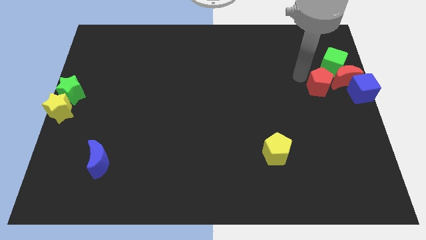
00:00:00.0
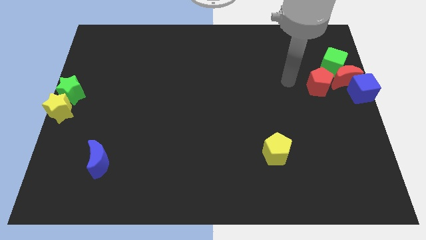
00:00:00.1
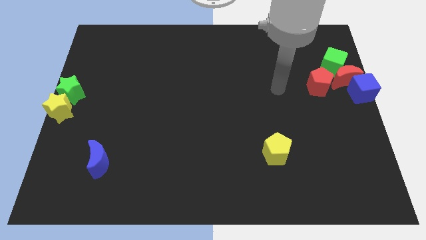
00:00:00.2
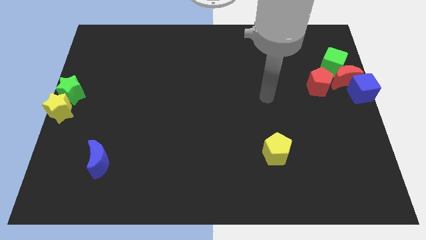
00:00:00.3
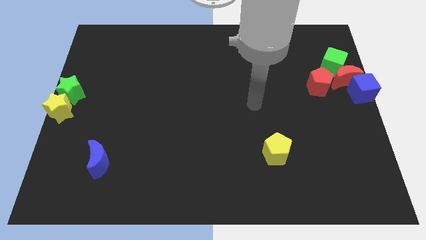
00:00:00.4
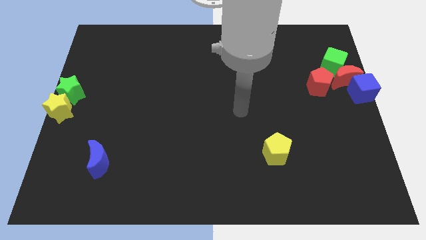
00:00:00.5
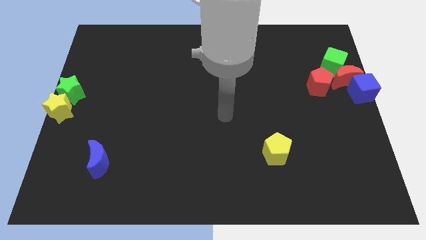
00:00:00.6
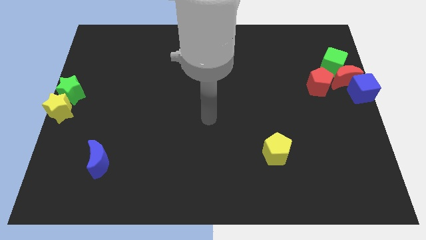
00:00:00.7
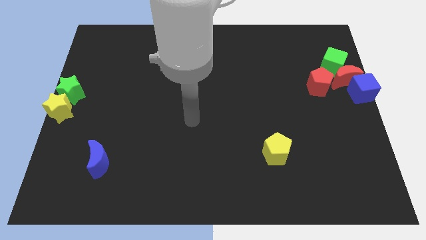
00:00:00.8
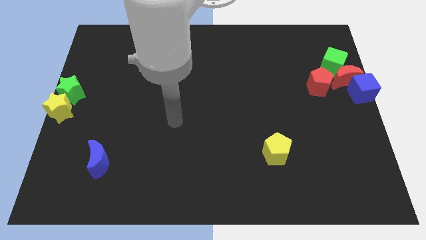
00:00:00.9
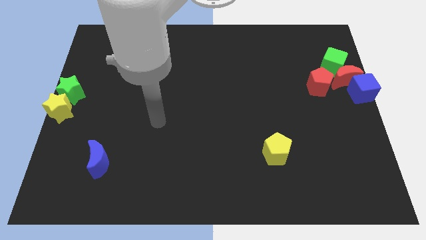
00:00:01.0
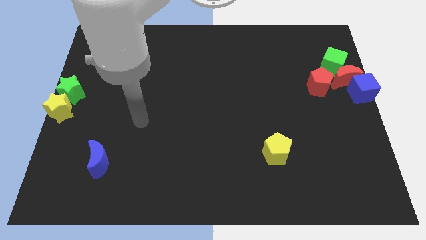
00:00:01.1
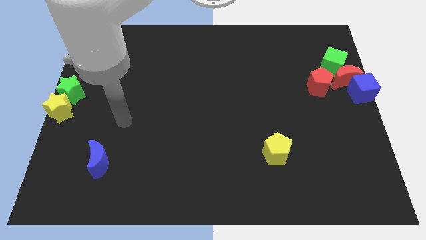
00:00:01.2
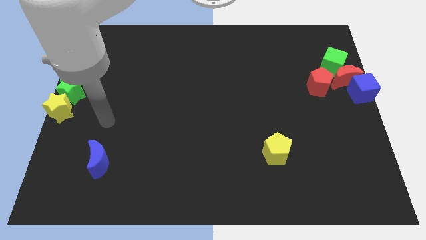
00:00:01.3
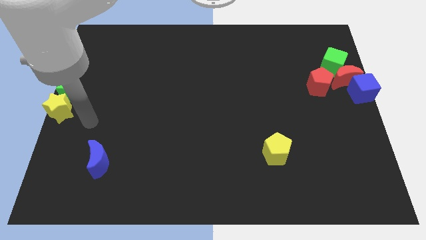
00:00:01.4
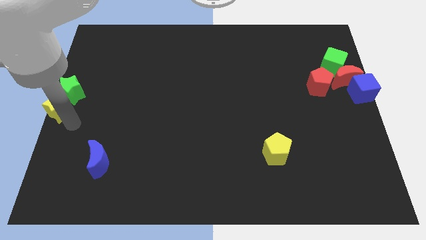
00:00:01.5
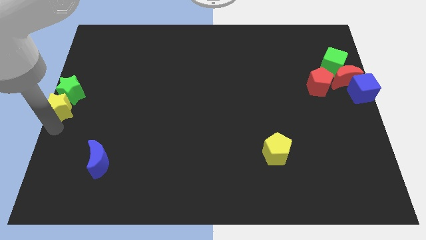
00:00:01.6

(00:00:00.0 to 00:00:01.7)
move your arm away from the red pentagon

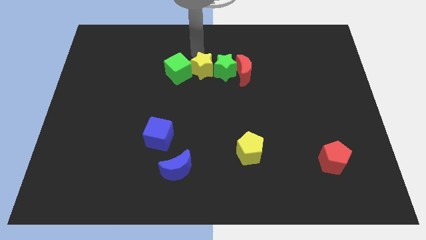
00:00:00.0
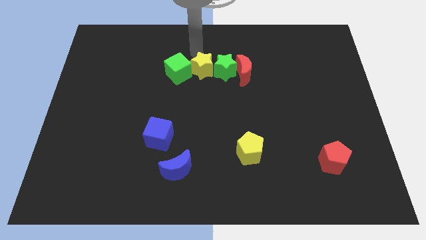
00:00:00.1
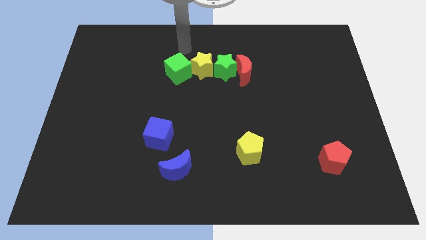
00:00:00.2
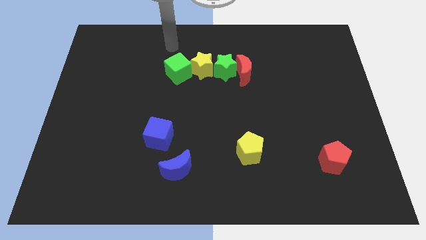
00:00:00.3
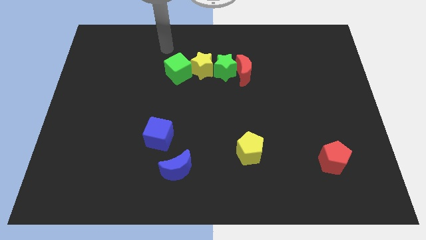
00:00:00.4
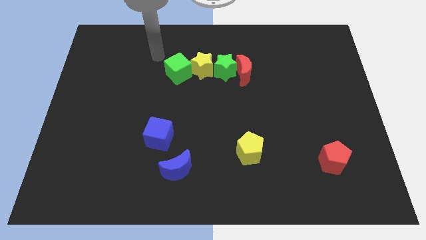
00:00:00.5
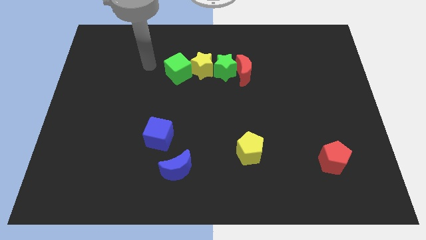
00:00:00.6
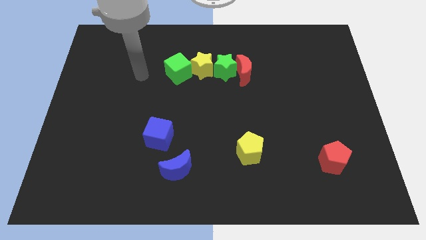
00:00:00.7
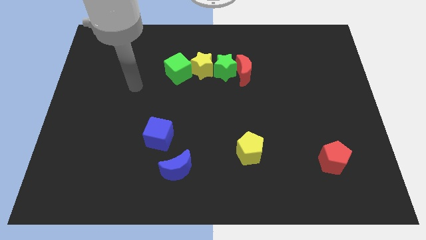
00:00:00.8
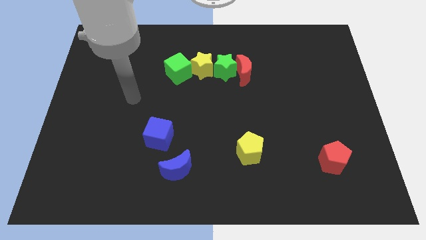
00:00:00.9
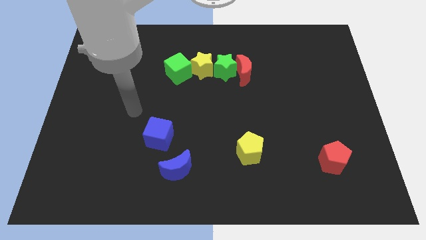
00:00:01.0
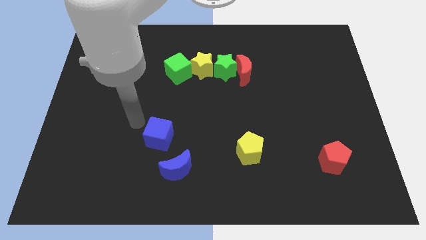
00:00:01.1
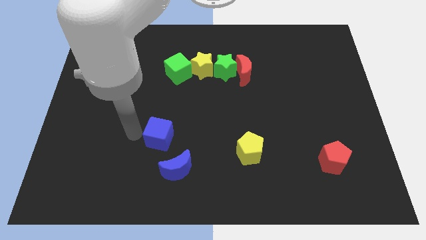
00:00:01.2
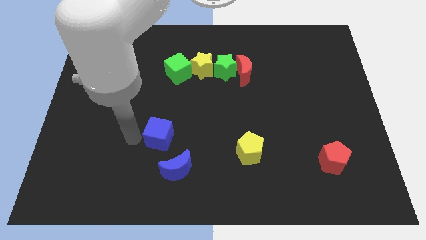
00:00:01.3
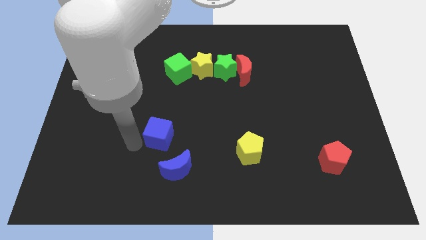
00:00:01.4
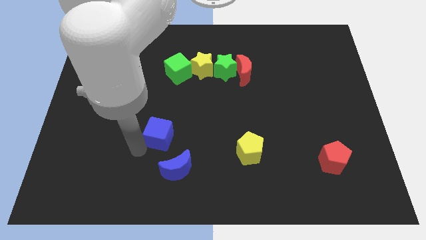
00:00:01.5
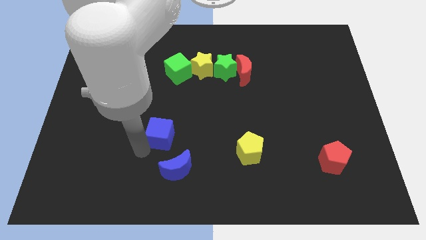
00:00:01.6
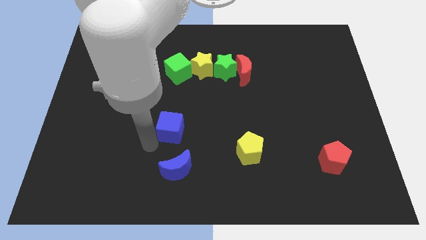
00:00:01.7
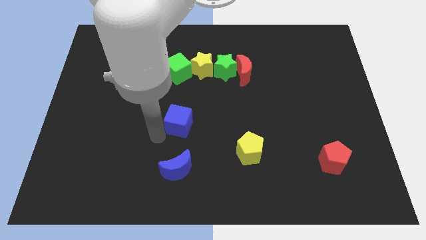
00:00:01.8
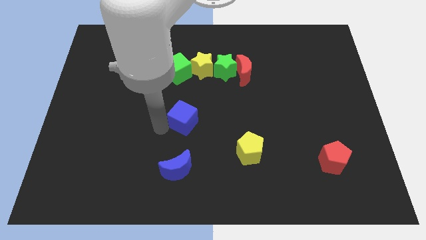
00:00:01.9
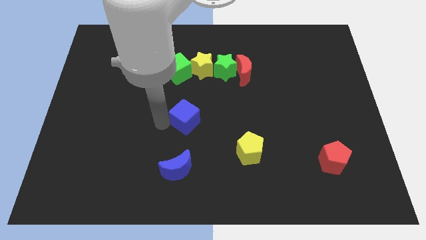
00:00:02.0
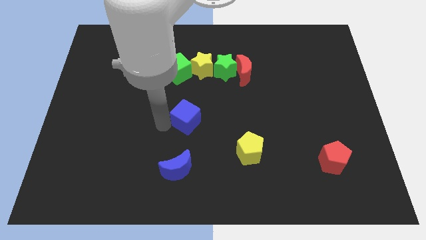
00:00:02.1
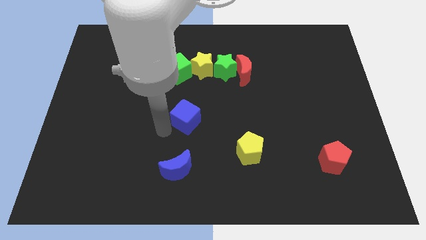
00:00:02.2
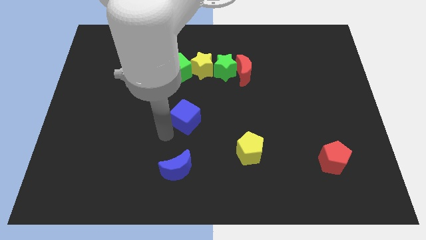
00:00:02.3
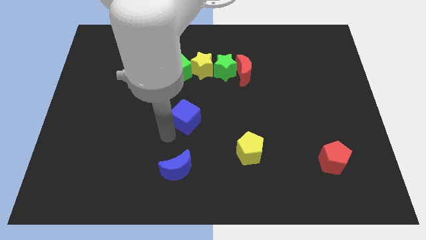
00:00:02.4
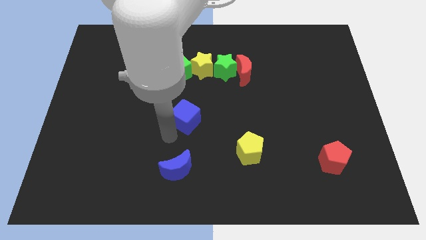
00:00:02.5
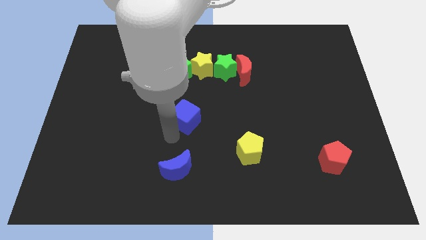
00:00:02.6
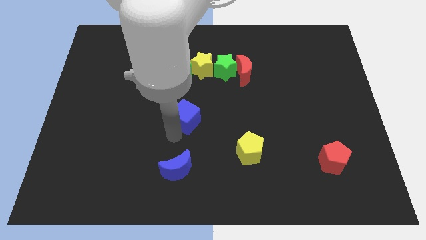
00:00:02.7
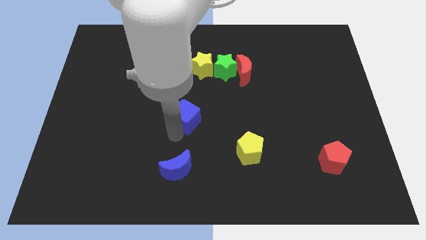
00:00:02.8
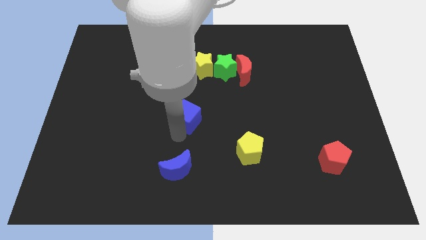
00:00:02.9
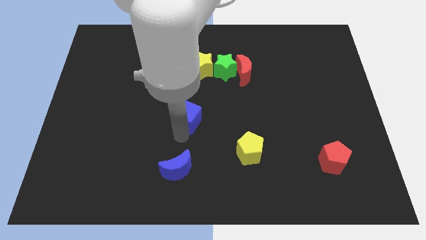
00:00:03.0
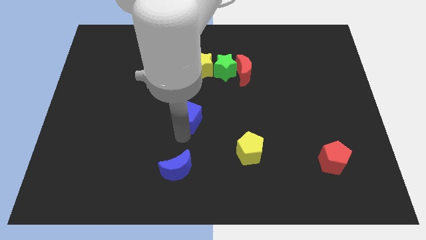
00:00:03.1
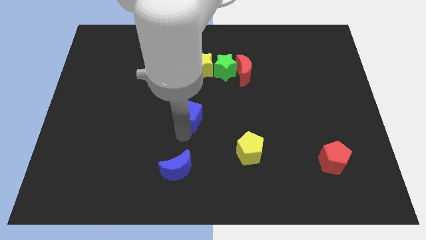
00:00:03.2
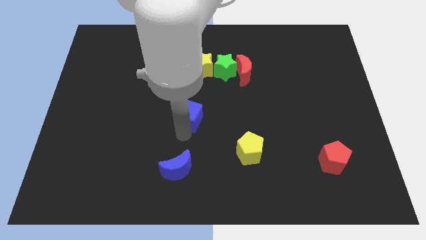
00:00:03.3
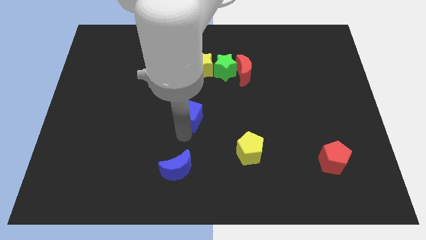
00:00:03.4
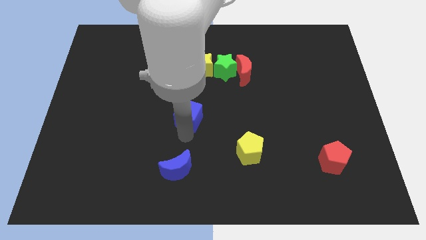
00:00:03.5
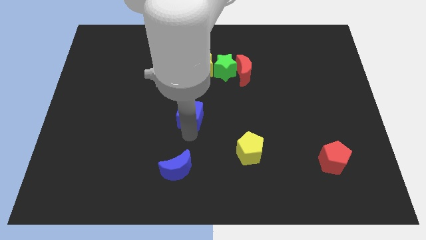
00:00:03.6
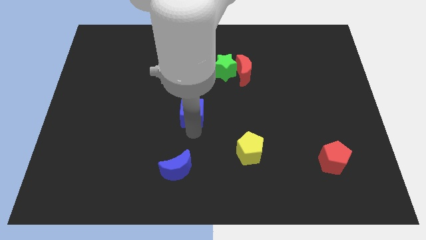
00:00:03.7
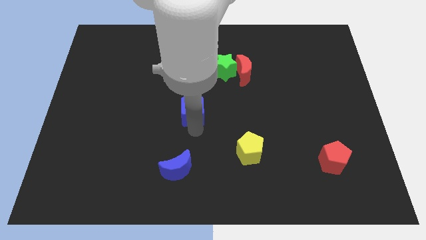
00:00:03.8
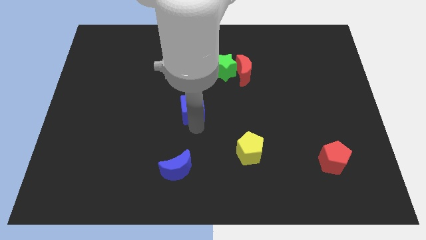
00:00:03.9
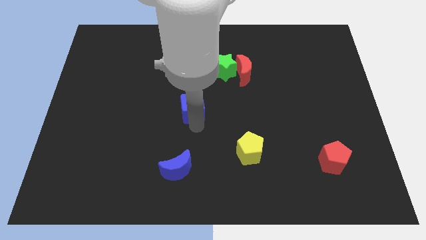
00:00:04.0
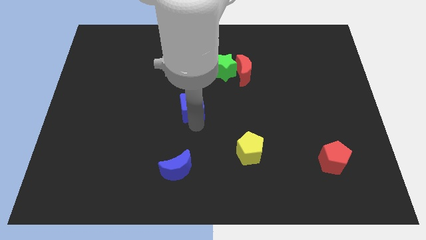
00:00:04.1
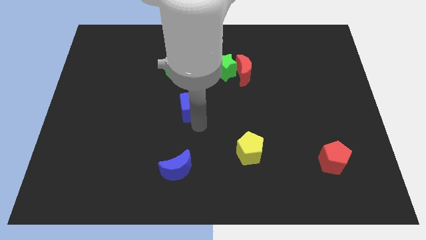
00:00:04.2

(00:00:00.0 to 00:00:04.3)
move the blue cube to the center of the board

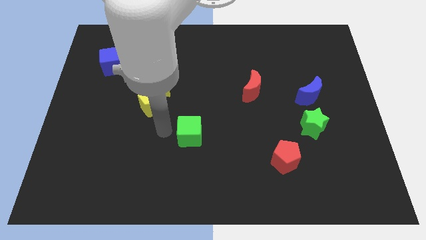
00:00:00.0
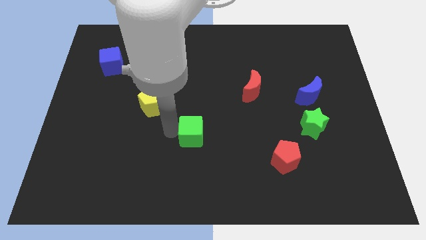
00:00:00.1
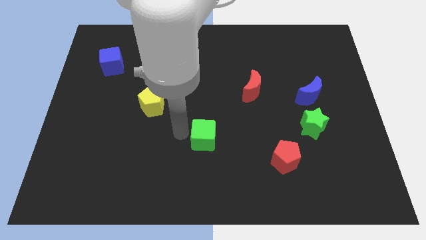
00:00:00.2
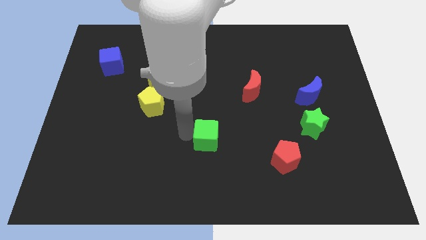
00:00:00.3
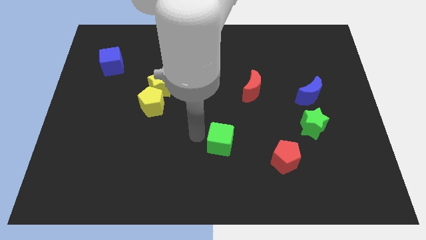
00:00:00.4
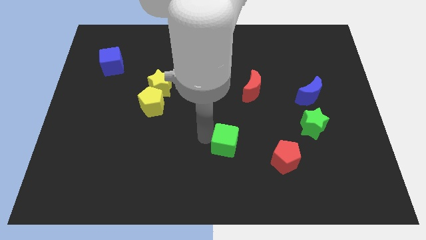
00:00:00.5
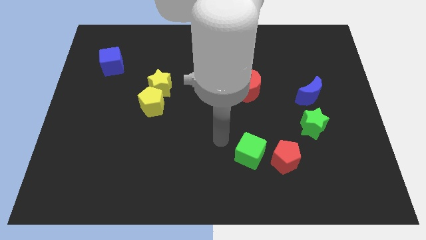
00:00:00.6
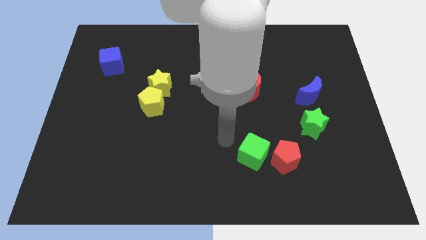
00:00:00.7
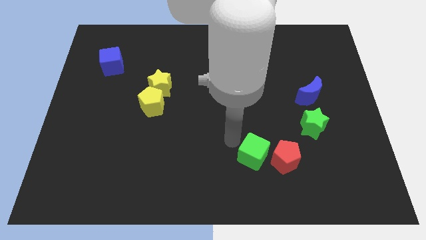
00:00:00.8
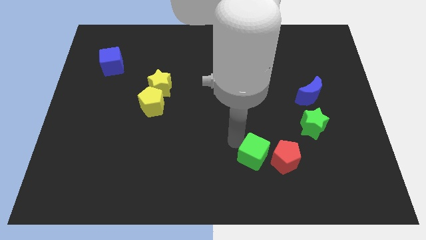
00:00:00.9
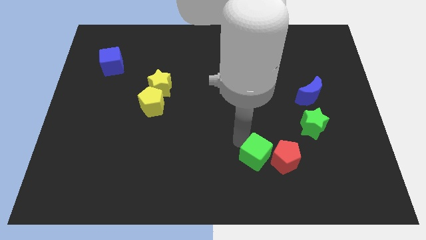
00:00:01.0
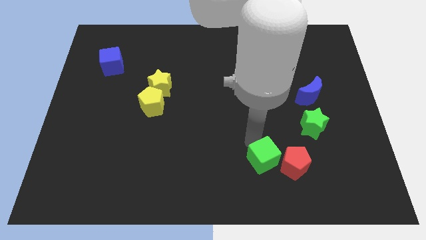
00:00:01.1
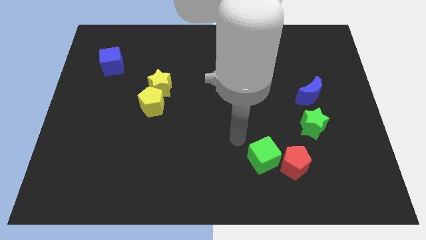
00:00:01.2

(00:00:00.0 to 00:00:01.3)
move the green cube in to the red pentagon

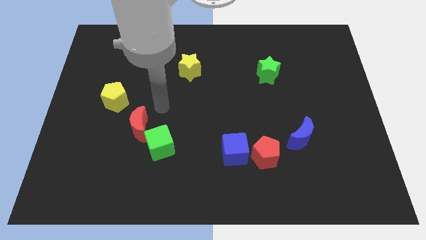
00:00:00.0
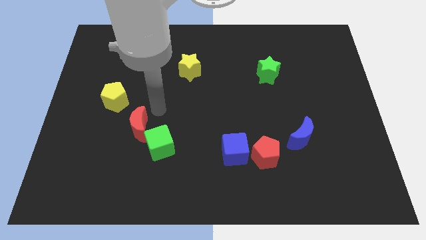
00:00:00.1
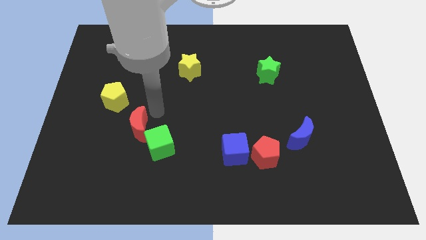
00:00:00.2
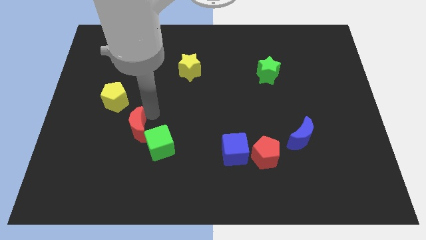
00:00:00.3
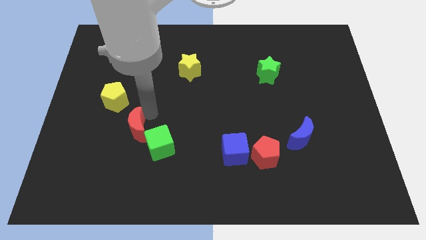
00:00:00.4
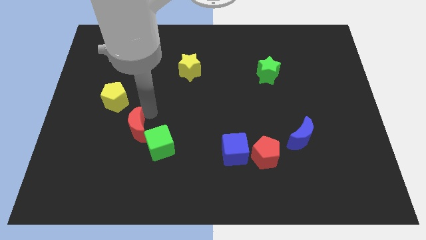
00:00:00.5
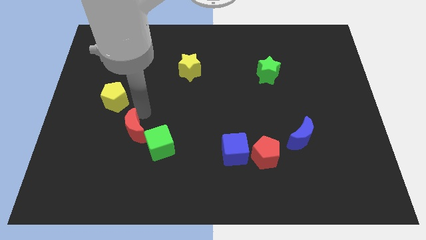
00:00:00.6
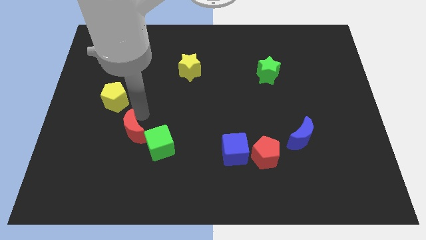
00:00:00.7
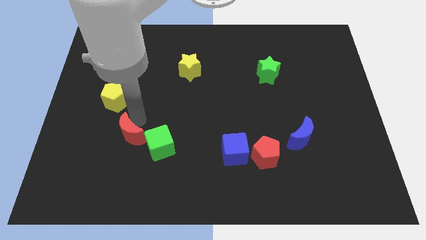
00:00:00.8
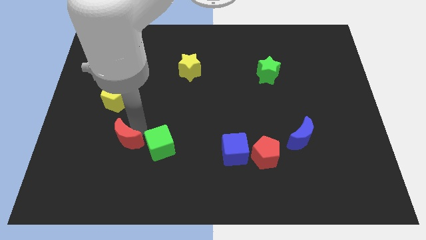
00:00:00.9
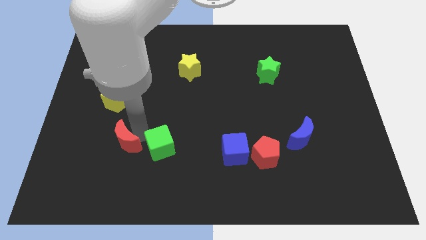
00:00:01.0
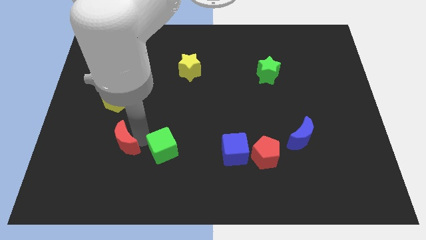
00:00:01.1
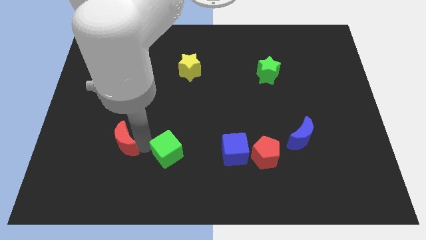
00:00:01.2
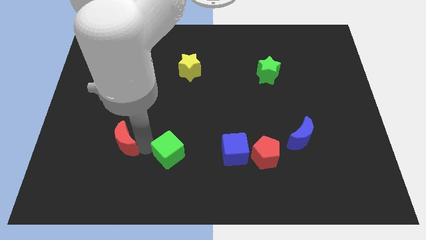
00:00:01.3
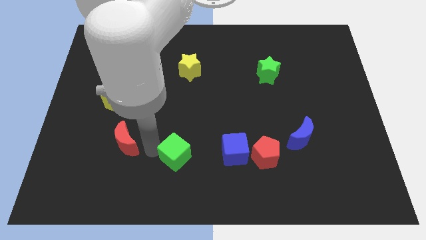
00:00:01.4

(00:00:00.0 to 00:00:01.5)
separate the red moon and green cube
